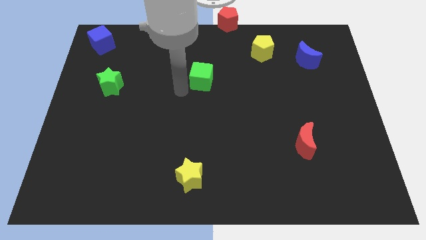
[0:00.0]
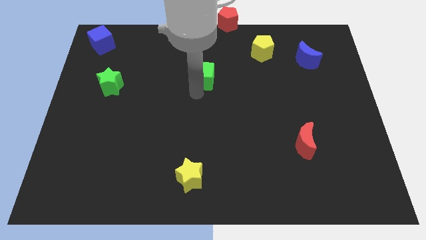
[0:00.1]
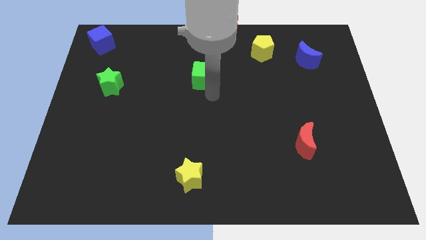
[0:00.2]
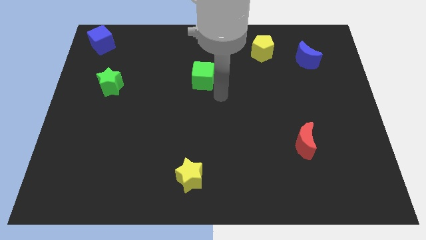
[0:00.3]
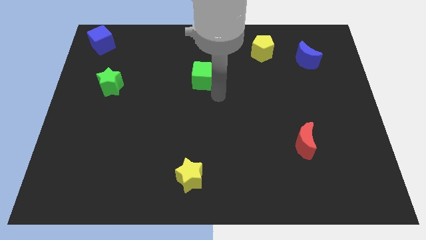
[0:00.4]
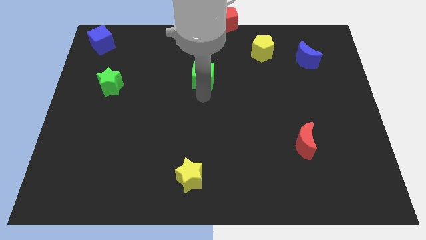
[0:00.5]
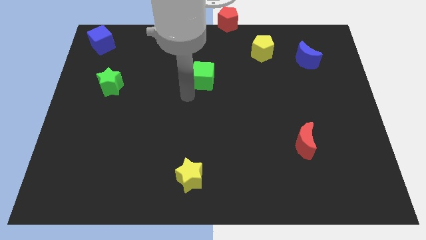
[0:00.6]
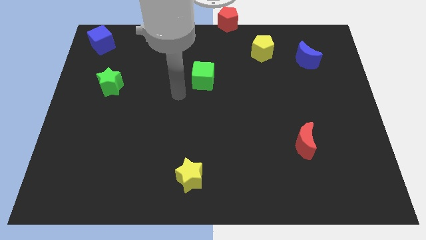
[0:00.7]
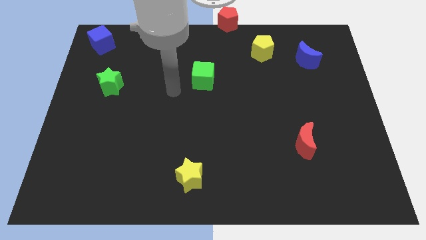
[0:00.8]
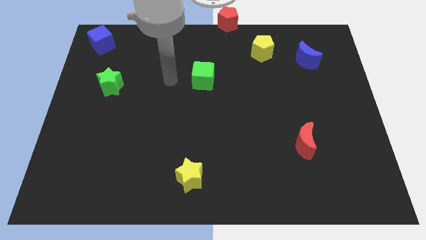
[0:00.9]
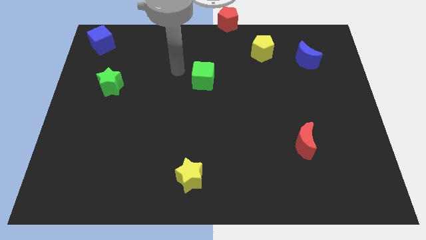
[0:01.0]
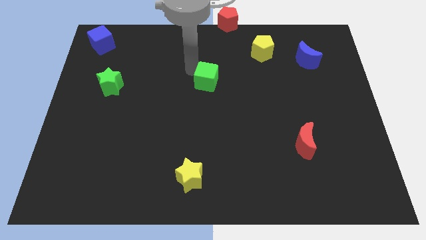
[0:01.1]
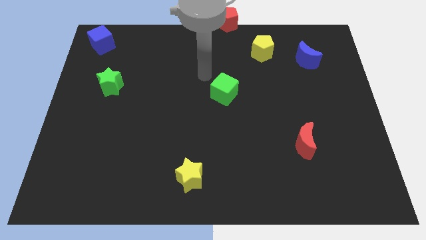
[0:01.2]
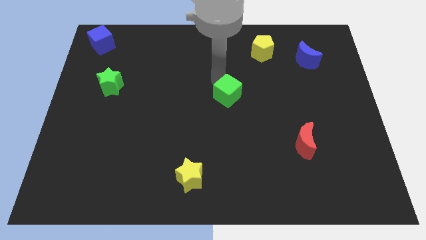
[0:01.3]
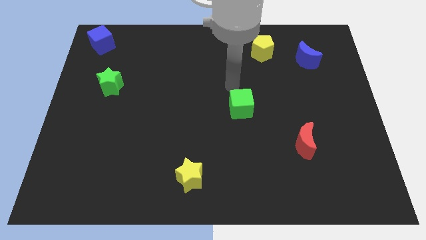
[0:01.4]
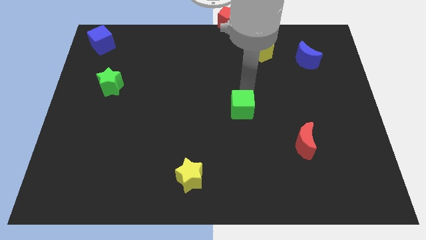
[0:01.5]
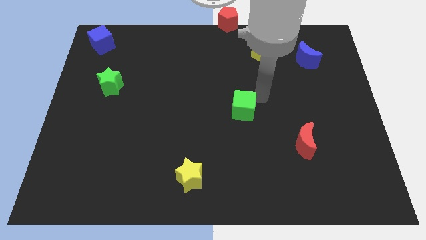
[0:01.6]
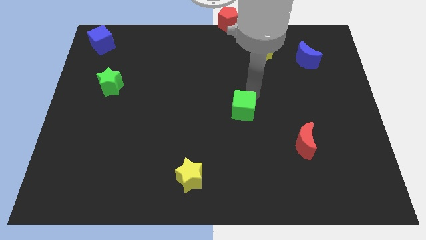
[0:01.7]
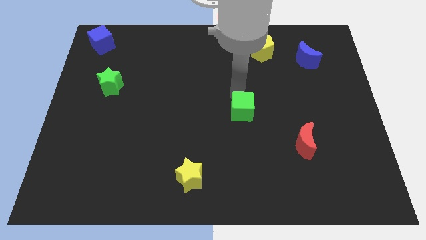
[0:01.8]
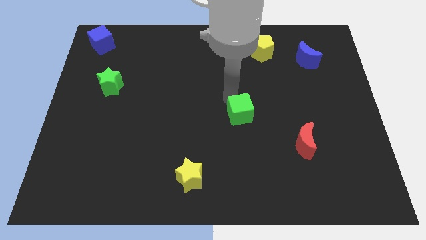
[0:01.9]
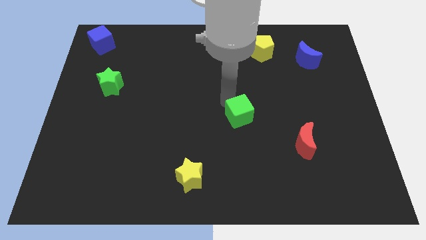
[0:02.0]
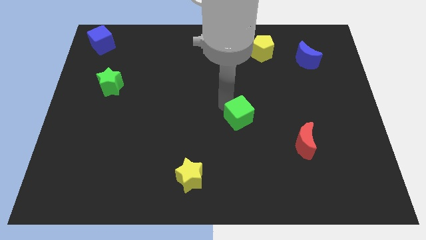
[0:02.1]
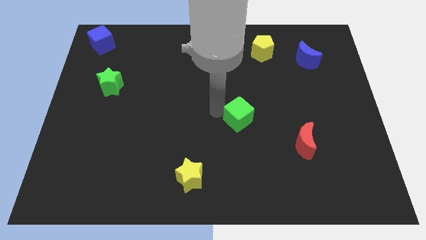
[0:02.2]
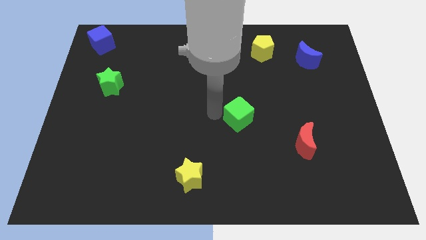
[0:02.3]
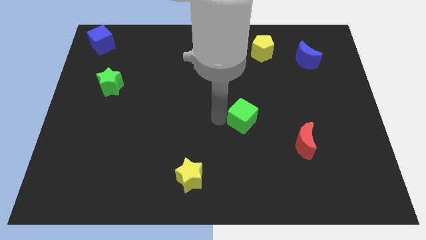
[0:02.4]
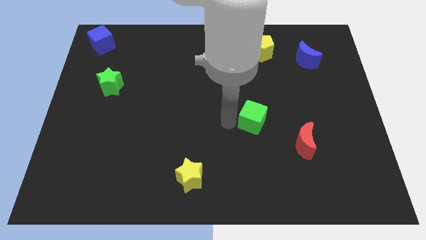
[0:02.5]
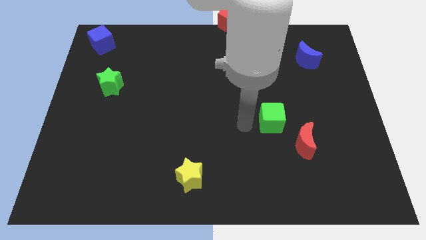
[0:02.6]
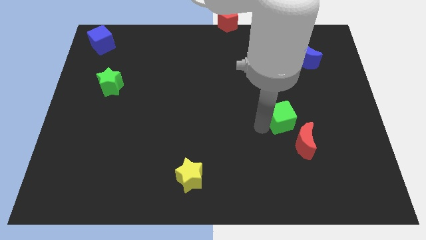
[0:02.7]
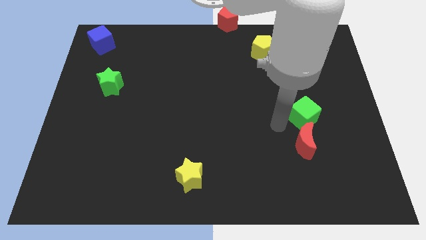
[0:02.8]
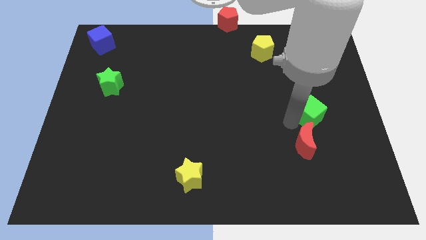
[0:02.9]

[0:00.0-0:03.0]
push the green cube to the top of the red crescent

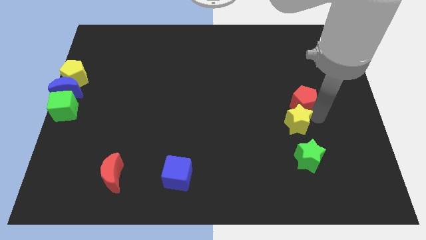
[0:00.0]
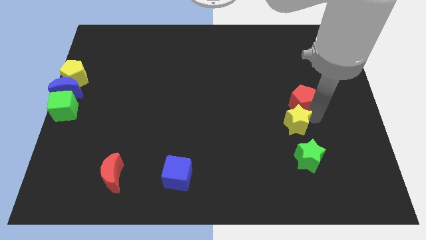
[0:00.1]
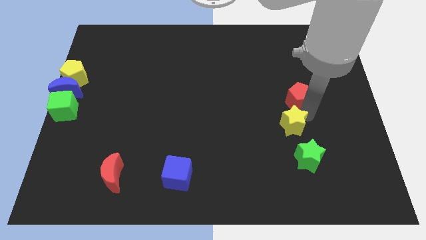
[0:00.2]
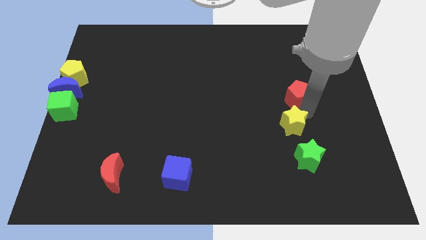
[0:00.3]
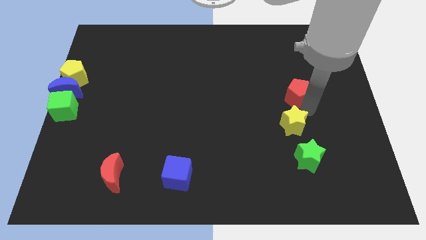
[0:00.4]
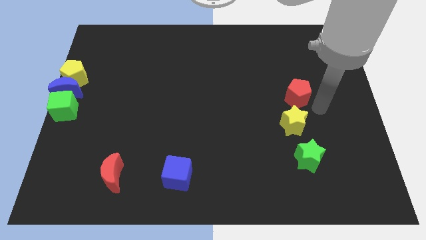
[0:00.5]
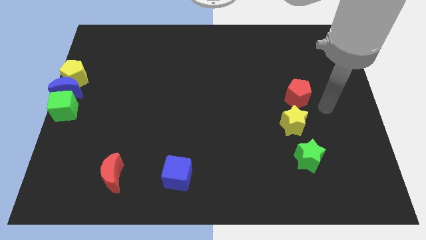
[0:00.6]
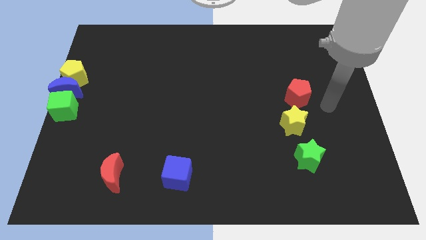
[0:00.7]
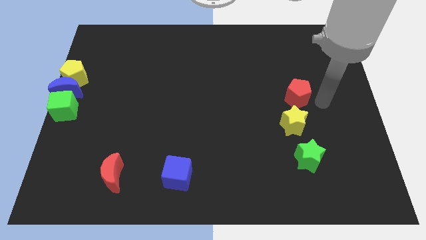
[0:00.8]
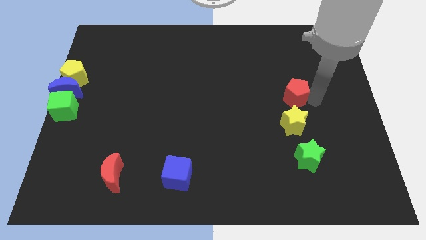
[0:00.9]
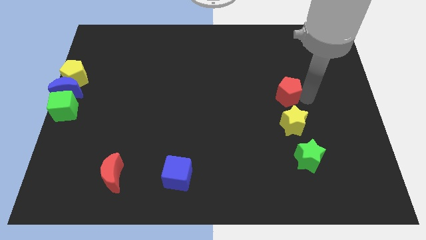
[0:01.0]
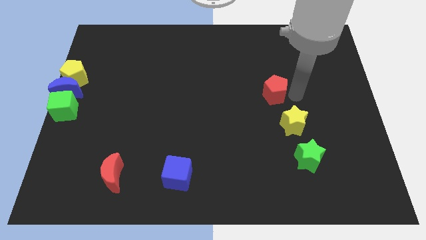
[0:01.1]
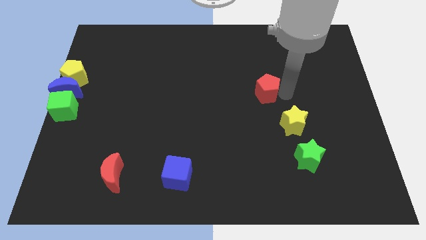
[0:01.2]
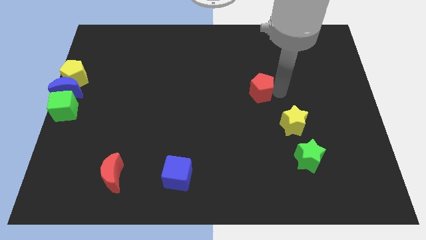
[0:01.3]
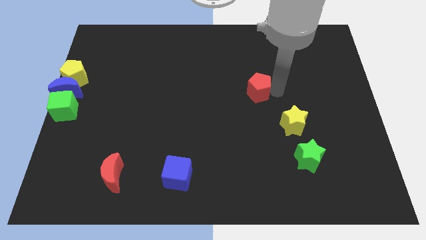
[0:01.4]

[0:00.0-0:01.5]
separate the red pentagon from the yellow star

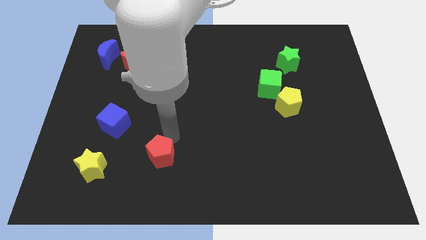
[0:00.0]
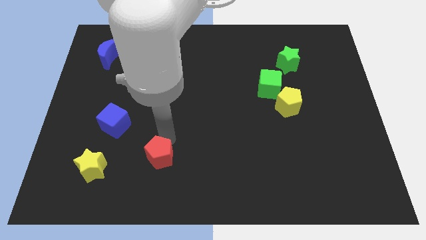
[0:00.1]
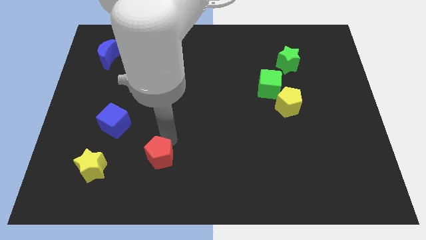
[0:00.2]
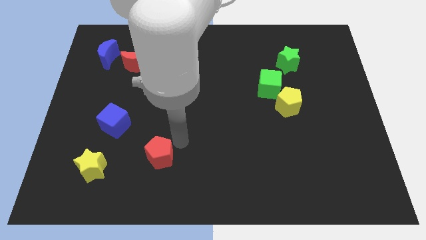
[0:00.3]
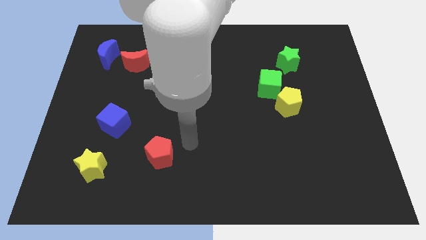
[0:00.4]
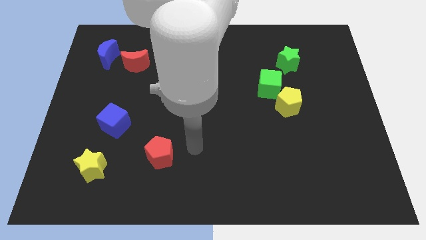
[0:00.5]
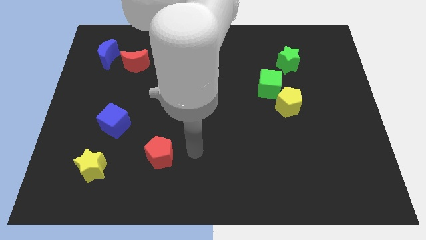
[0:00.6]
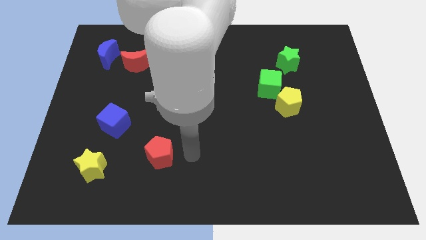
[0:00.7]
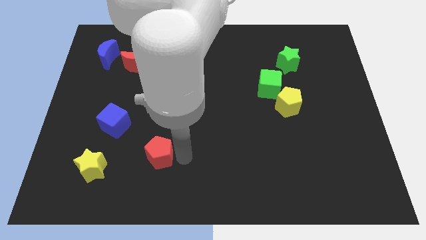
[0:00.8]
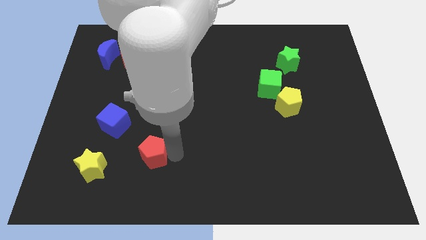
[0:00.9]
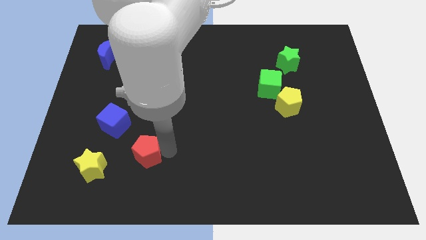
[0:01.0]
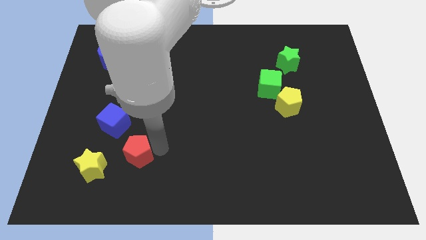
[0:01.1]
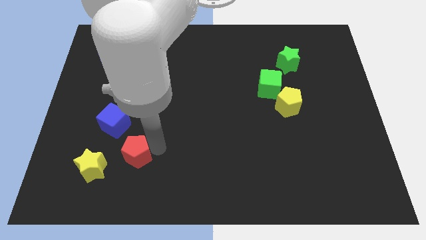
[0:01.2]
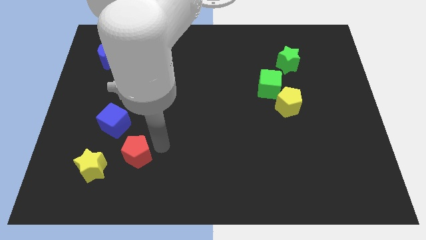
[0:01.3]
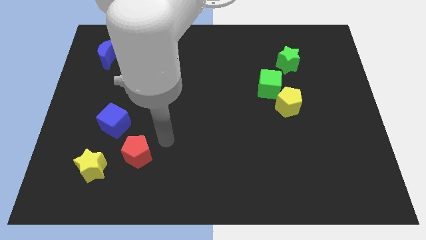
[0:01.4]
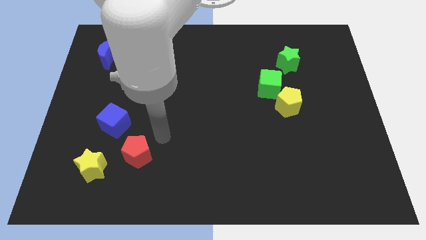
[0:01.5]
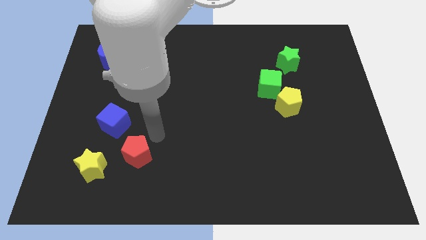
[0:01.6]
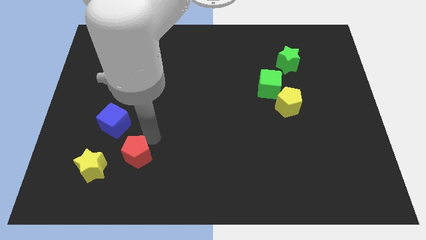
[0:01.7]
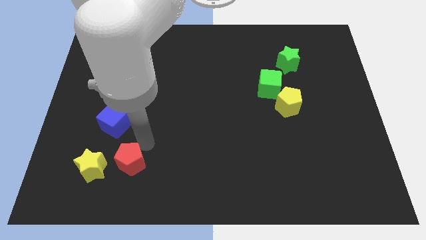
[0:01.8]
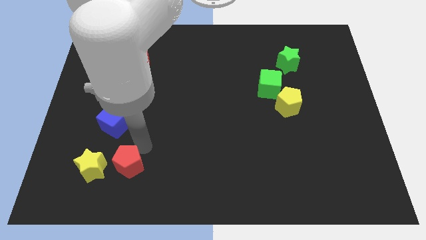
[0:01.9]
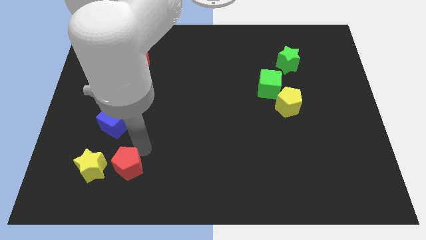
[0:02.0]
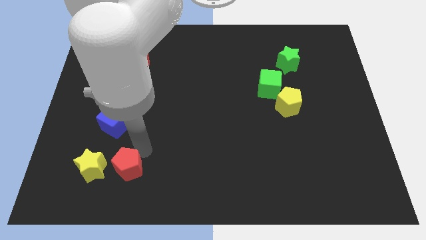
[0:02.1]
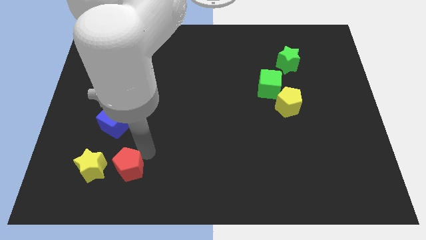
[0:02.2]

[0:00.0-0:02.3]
move the red pentagon to the right of the yellow star

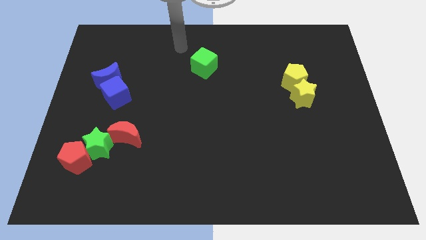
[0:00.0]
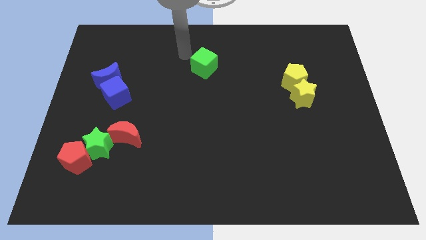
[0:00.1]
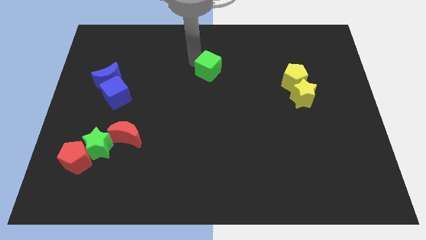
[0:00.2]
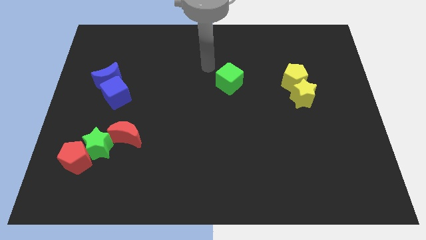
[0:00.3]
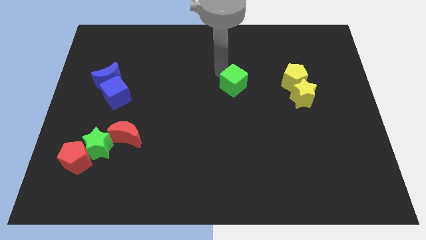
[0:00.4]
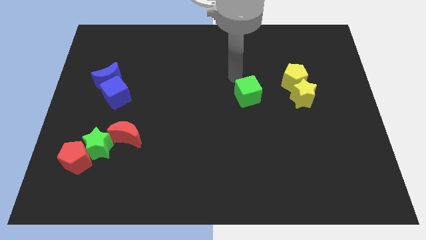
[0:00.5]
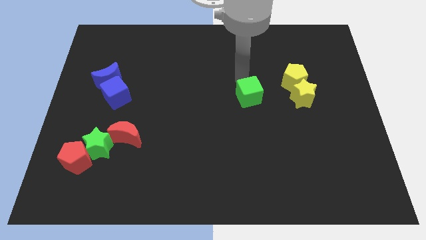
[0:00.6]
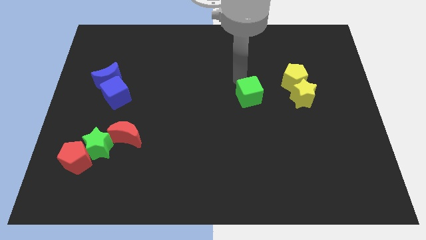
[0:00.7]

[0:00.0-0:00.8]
move the green cube towards the bottom side of the board

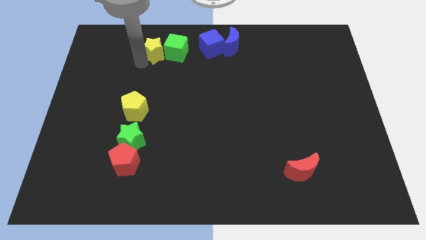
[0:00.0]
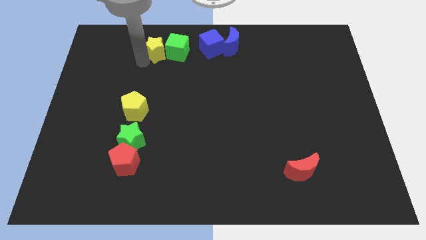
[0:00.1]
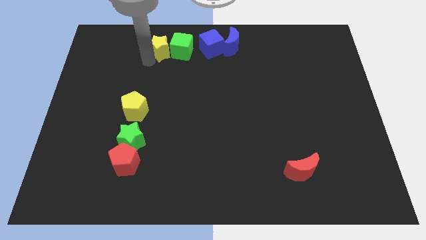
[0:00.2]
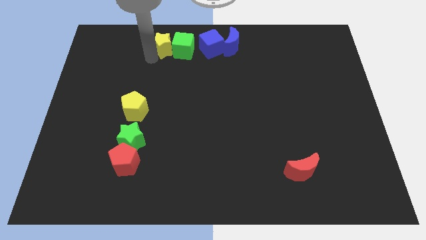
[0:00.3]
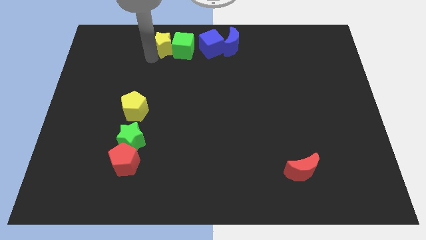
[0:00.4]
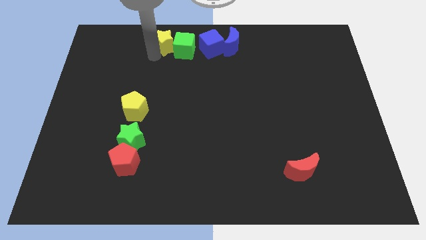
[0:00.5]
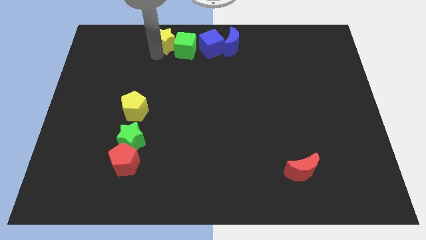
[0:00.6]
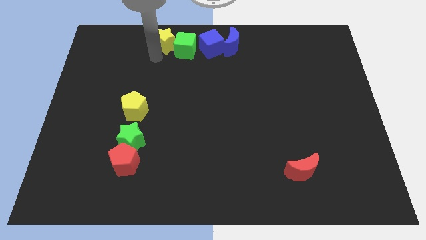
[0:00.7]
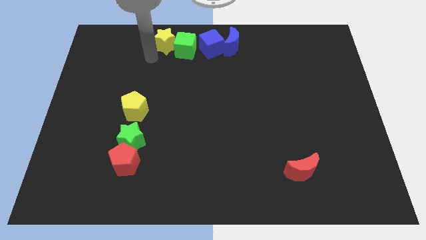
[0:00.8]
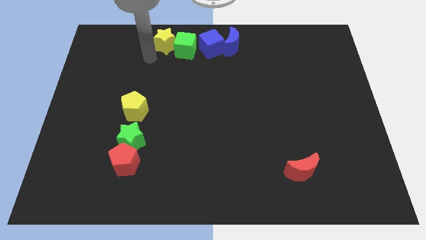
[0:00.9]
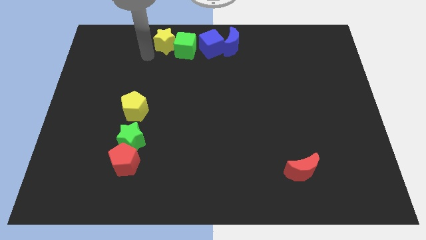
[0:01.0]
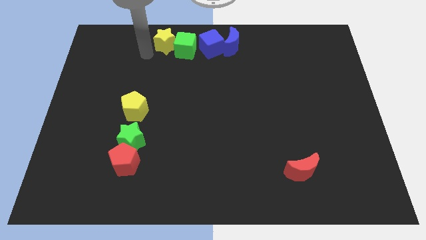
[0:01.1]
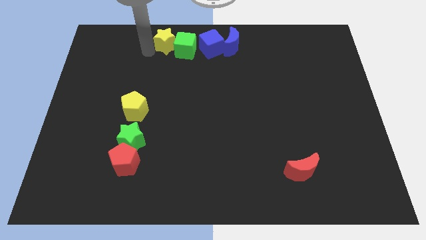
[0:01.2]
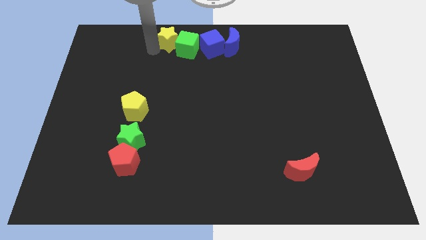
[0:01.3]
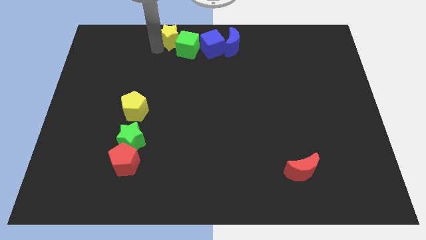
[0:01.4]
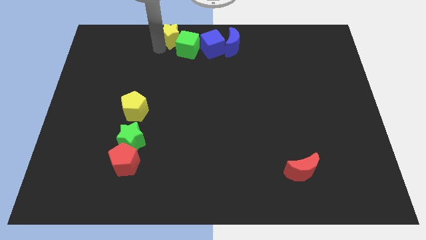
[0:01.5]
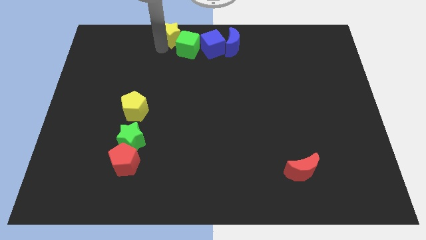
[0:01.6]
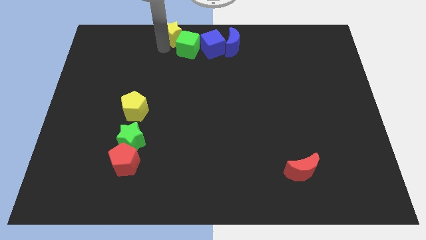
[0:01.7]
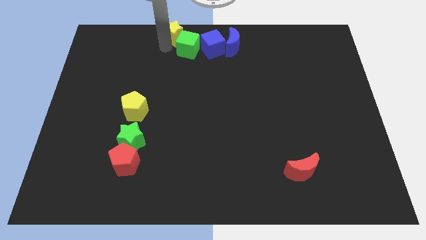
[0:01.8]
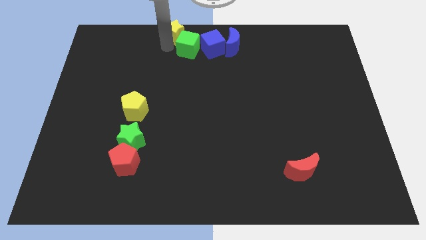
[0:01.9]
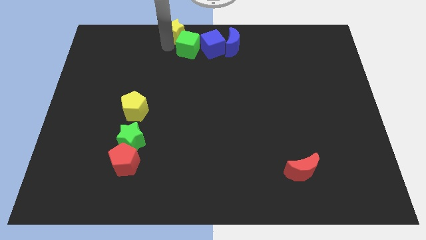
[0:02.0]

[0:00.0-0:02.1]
move yellow star towards top of the board
